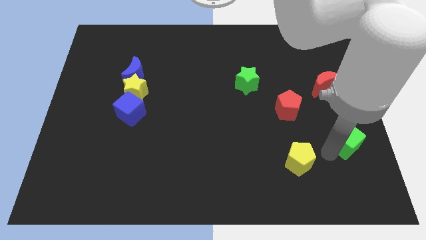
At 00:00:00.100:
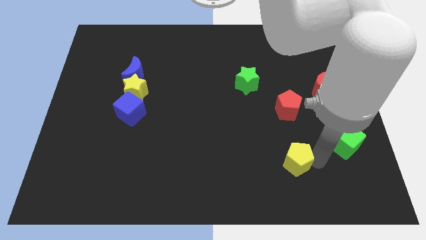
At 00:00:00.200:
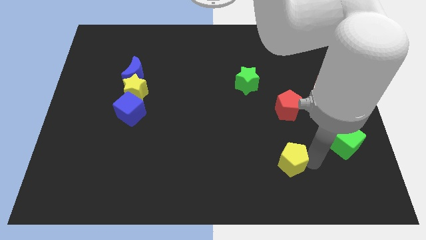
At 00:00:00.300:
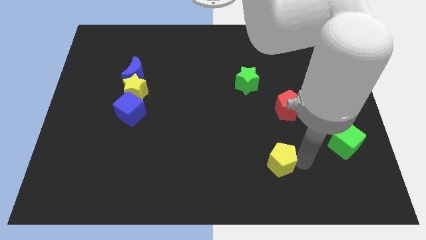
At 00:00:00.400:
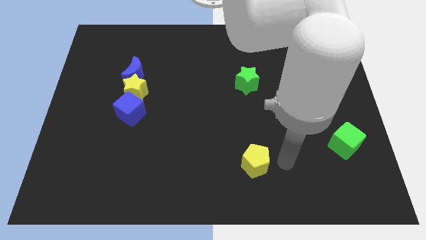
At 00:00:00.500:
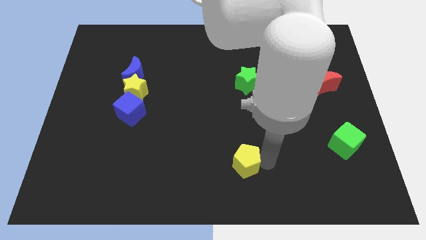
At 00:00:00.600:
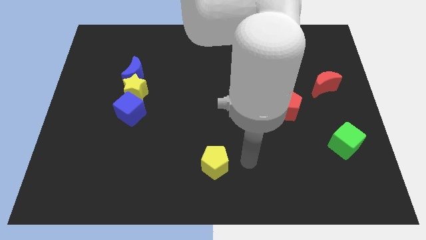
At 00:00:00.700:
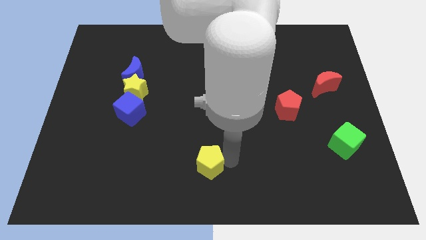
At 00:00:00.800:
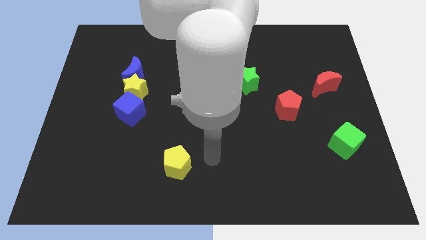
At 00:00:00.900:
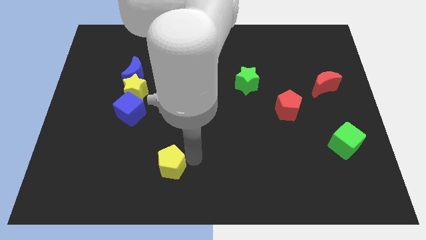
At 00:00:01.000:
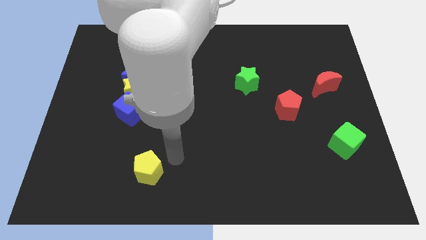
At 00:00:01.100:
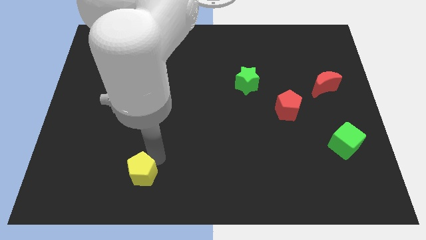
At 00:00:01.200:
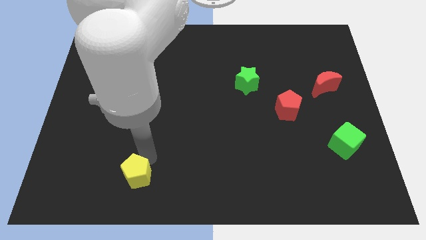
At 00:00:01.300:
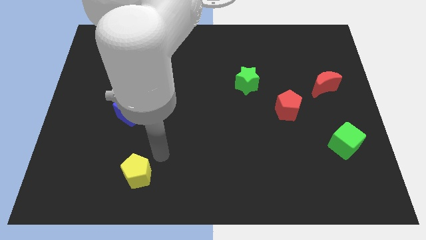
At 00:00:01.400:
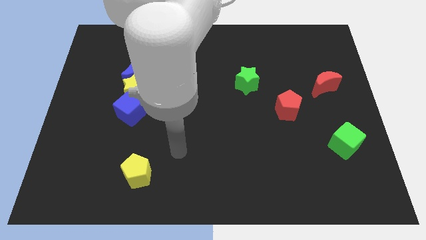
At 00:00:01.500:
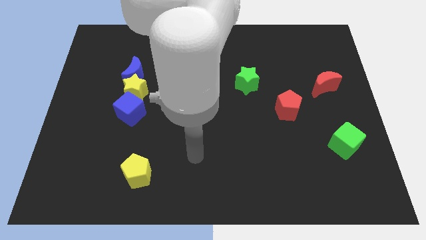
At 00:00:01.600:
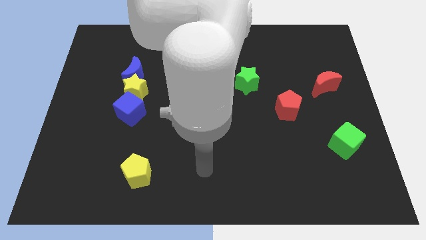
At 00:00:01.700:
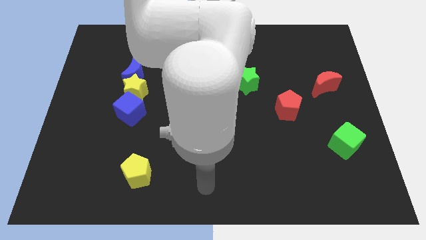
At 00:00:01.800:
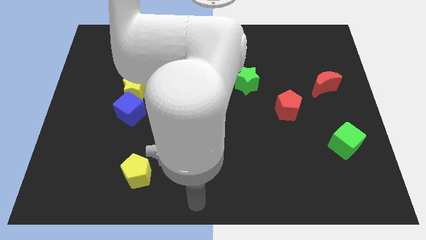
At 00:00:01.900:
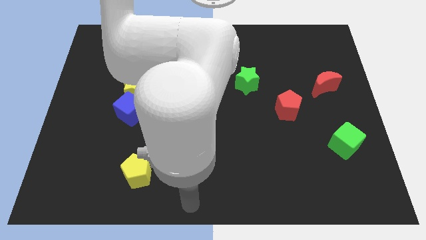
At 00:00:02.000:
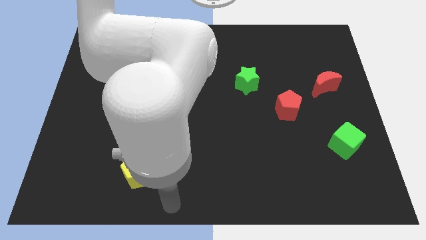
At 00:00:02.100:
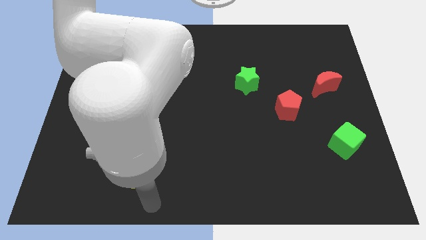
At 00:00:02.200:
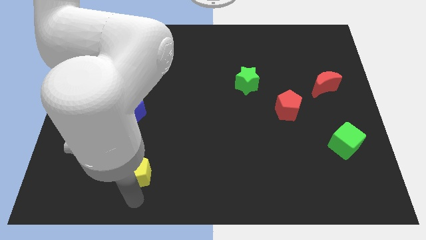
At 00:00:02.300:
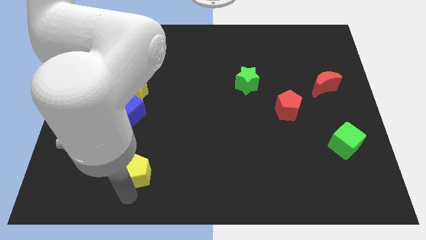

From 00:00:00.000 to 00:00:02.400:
move the yellow pentagon towards the left bottom

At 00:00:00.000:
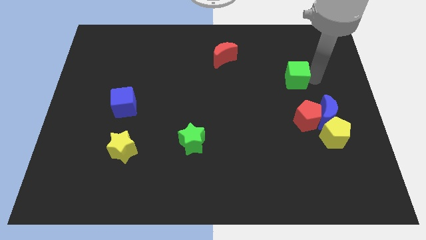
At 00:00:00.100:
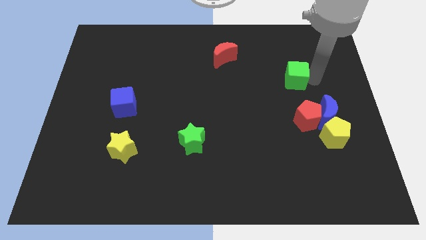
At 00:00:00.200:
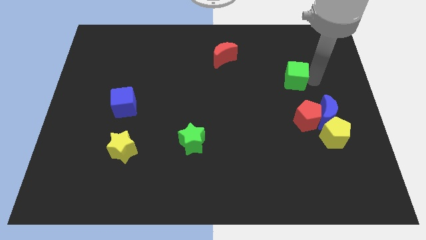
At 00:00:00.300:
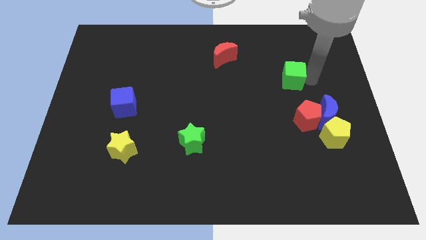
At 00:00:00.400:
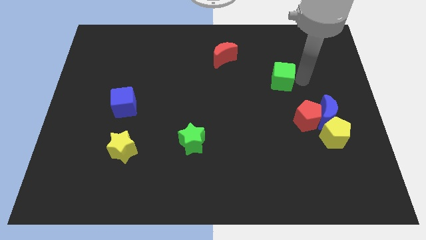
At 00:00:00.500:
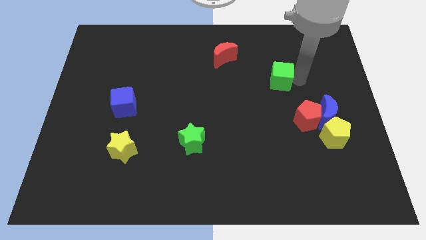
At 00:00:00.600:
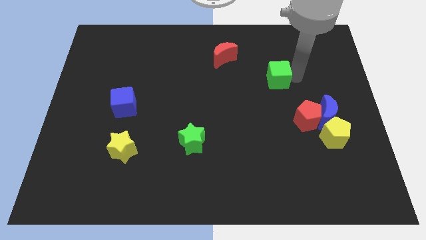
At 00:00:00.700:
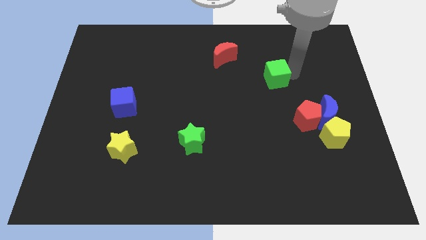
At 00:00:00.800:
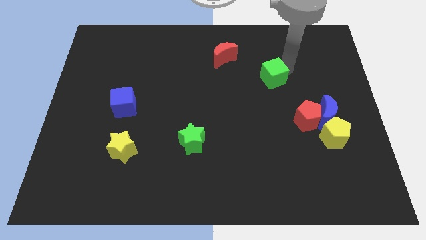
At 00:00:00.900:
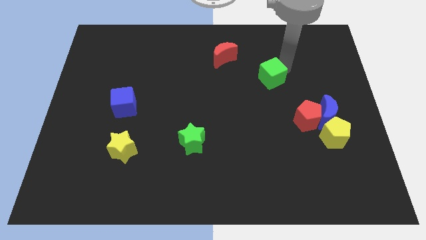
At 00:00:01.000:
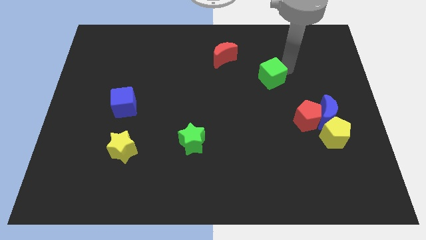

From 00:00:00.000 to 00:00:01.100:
move the green cube towards the red crescent

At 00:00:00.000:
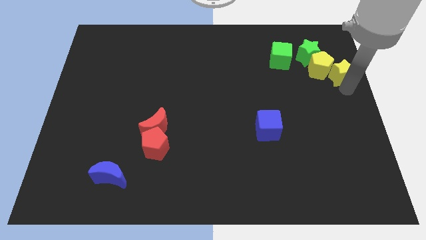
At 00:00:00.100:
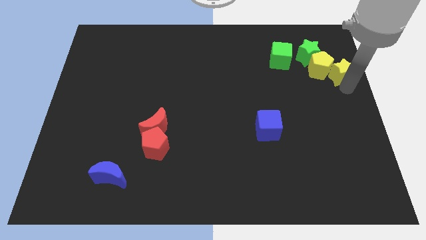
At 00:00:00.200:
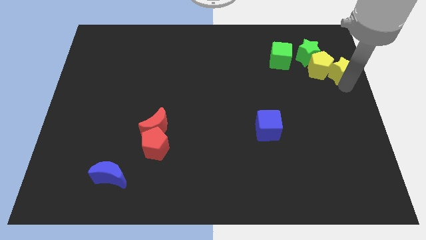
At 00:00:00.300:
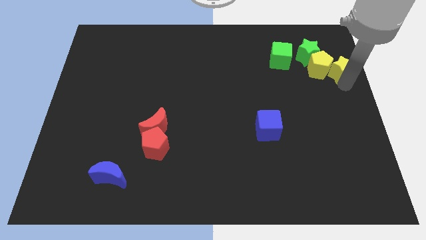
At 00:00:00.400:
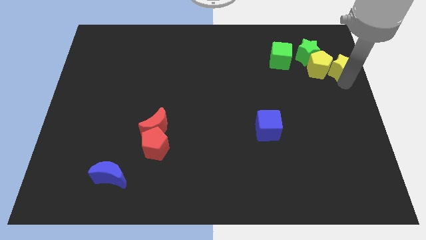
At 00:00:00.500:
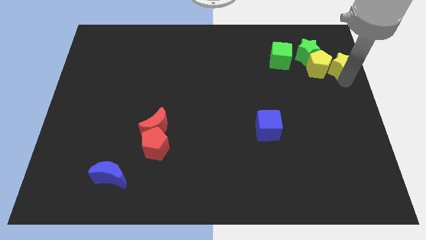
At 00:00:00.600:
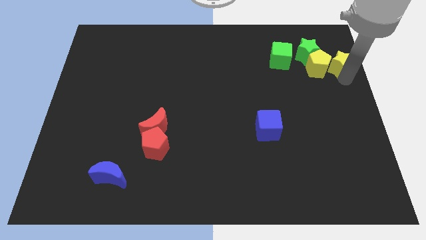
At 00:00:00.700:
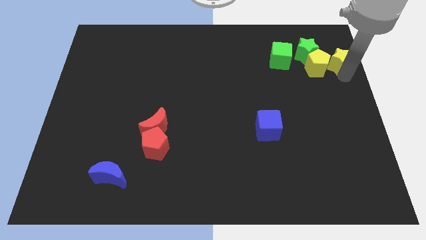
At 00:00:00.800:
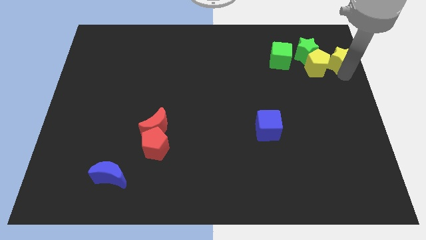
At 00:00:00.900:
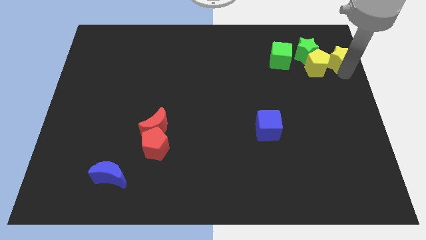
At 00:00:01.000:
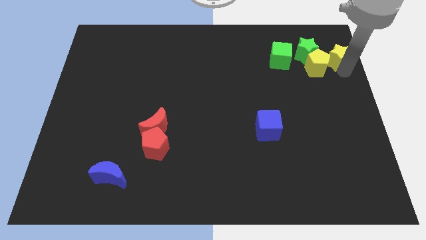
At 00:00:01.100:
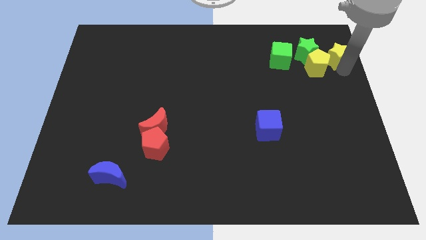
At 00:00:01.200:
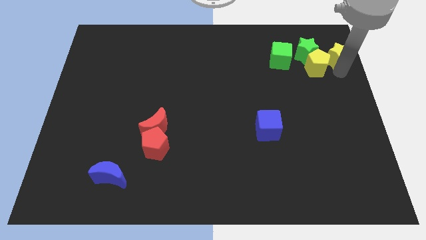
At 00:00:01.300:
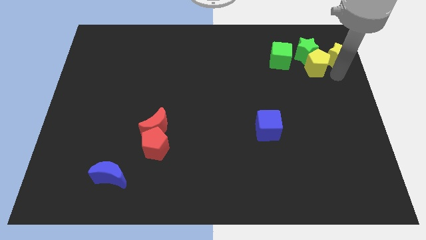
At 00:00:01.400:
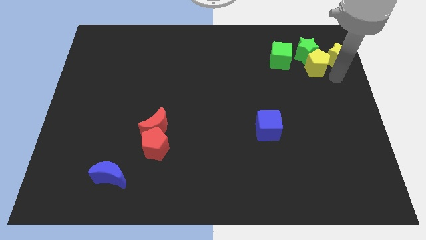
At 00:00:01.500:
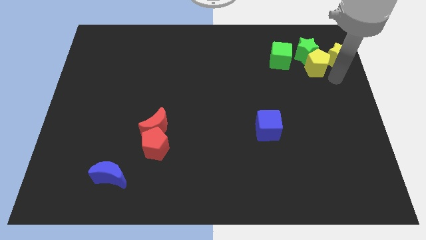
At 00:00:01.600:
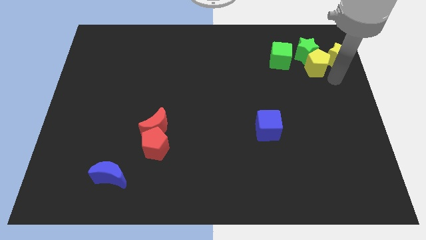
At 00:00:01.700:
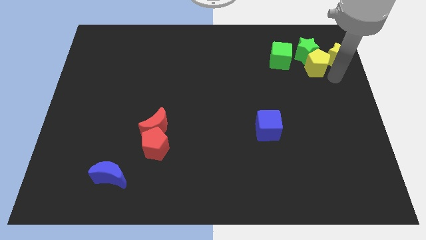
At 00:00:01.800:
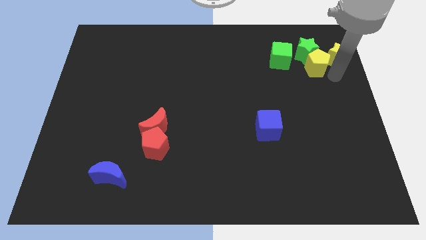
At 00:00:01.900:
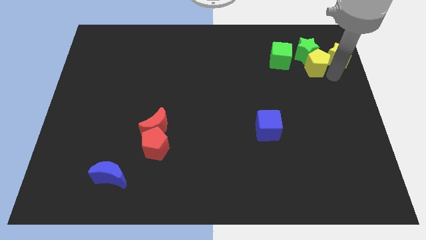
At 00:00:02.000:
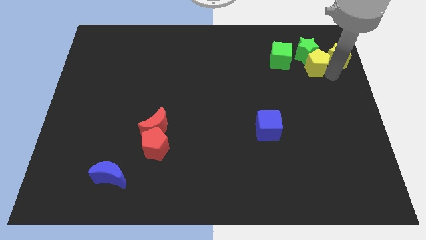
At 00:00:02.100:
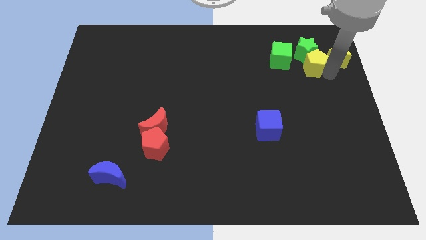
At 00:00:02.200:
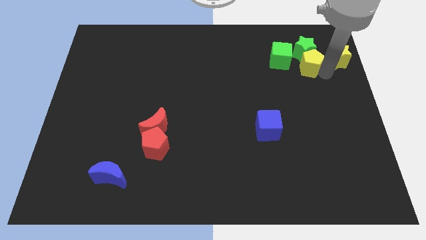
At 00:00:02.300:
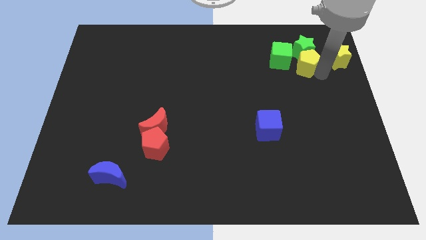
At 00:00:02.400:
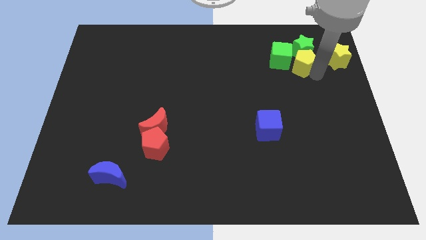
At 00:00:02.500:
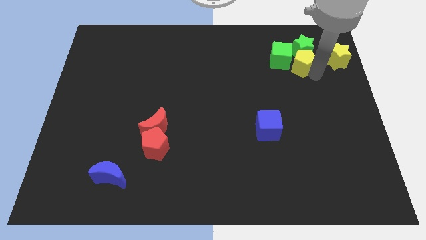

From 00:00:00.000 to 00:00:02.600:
separate yellow pentagon and yellow star

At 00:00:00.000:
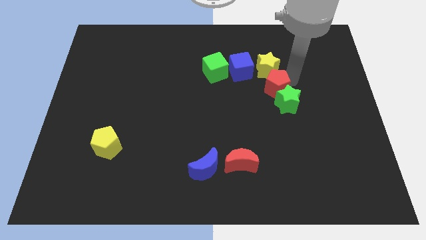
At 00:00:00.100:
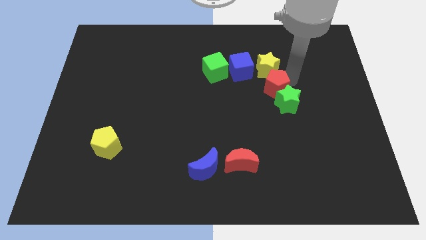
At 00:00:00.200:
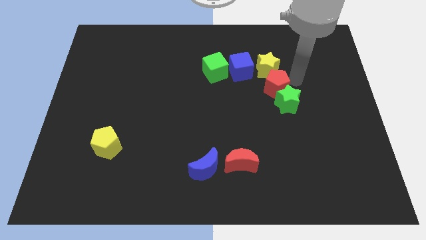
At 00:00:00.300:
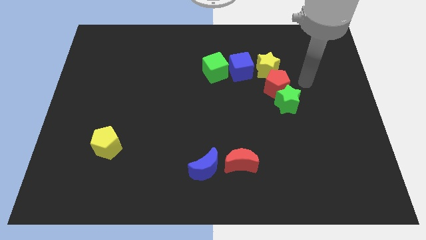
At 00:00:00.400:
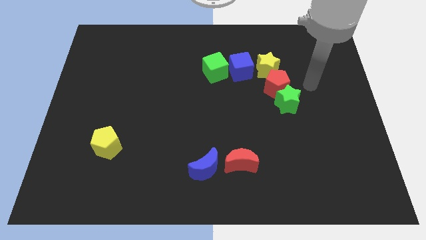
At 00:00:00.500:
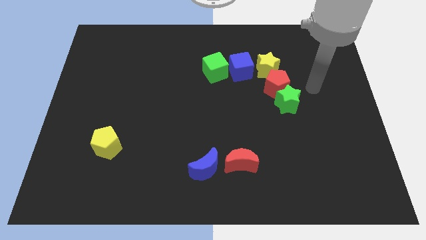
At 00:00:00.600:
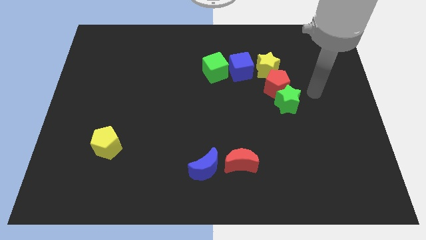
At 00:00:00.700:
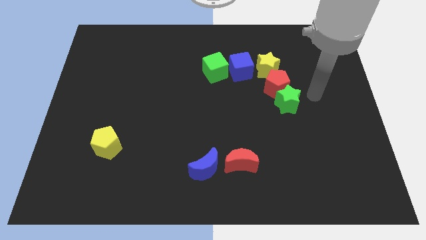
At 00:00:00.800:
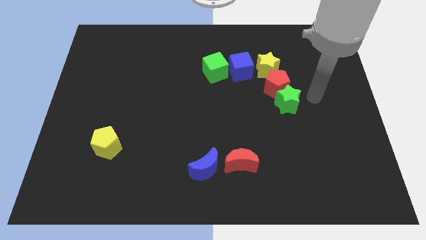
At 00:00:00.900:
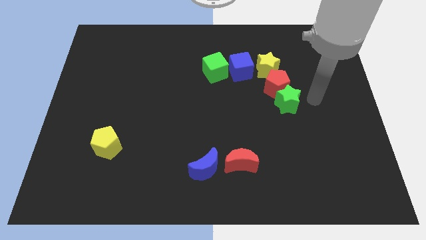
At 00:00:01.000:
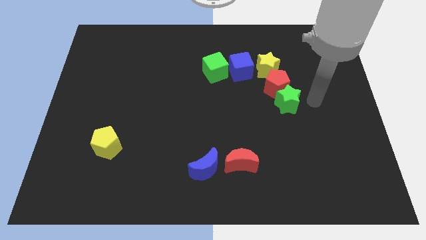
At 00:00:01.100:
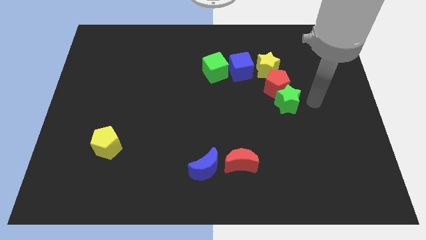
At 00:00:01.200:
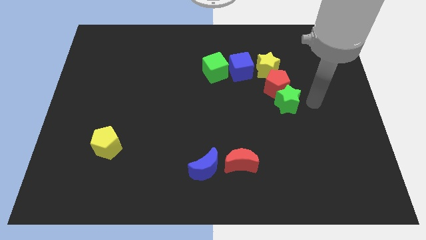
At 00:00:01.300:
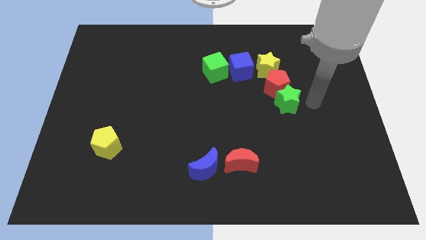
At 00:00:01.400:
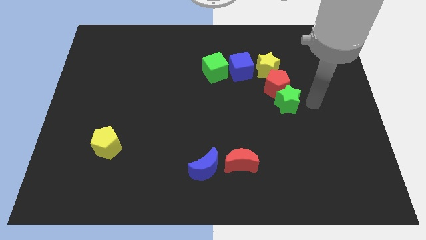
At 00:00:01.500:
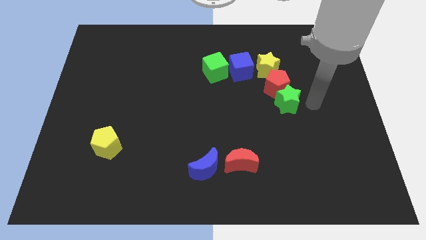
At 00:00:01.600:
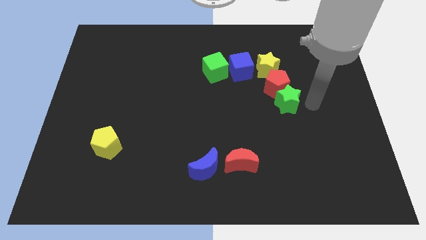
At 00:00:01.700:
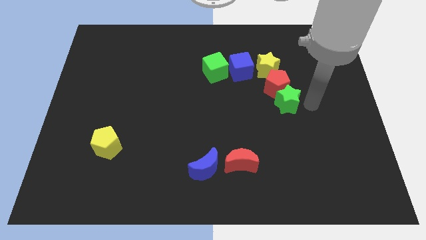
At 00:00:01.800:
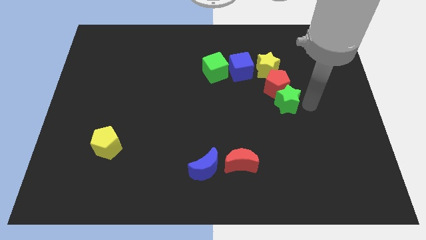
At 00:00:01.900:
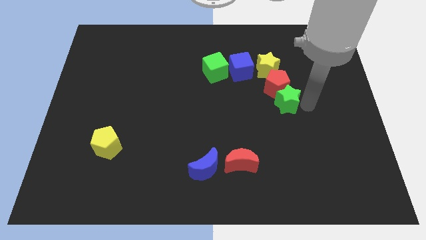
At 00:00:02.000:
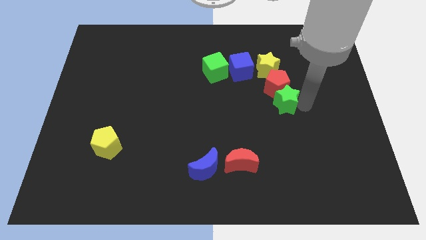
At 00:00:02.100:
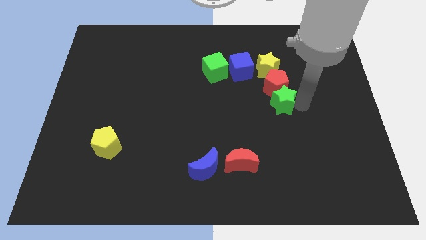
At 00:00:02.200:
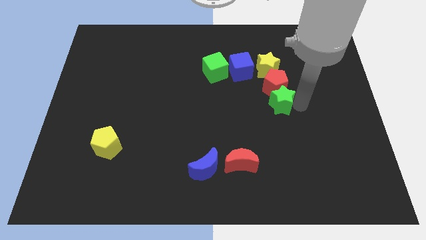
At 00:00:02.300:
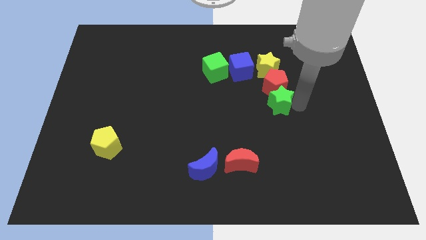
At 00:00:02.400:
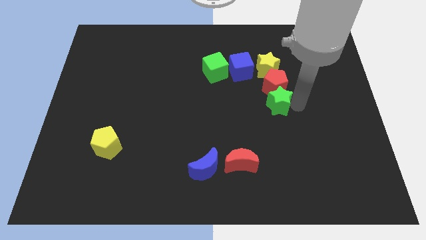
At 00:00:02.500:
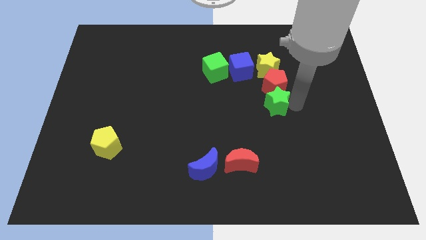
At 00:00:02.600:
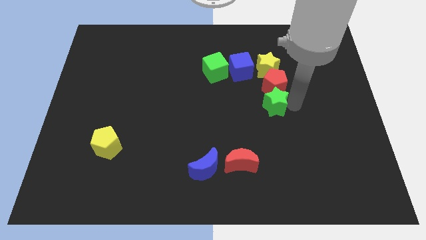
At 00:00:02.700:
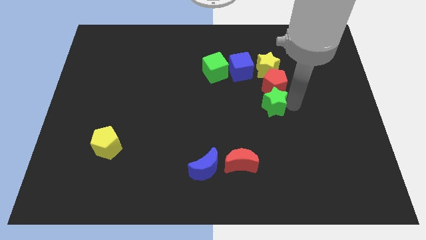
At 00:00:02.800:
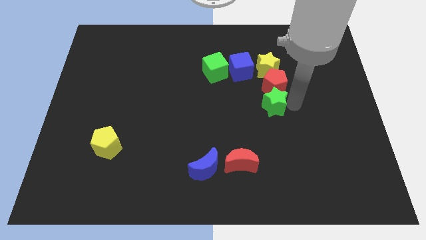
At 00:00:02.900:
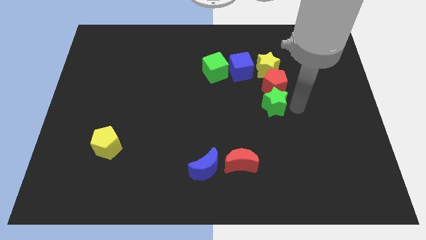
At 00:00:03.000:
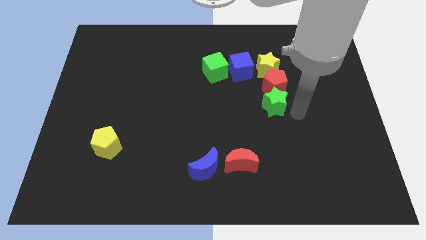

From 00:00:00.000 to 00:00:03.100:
push the green star vertically at the bottom of the red pentagon
